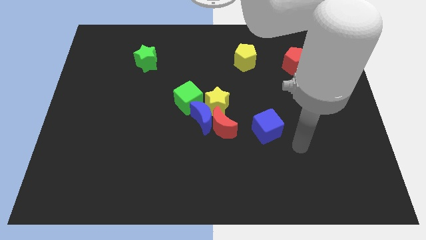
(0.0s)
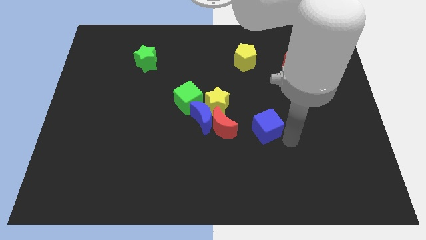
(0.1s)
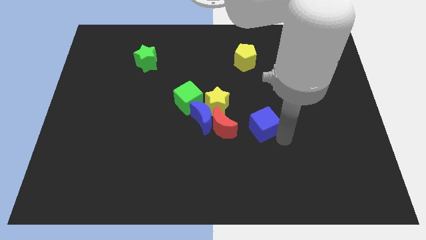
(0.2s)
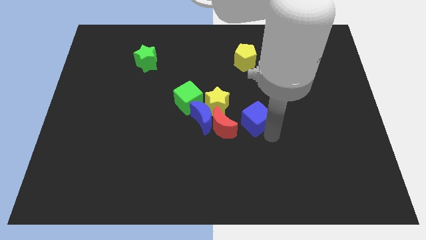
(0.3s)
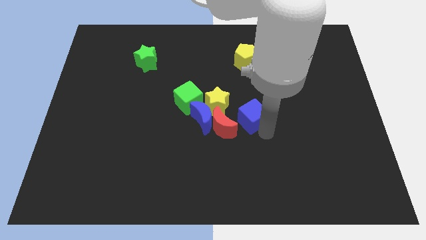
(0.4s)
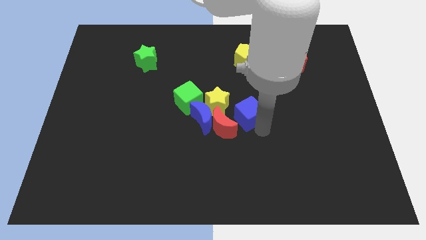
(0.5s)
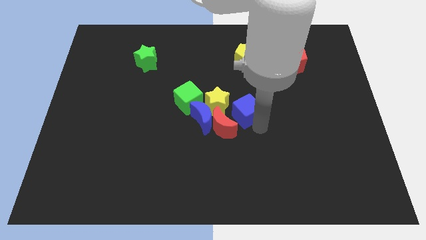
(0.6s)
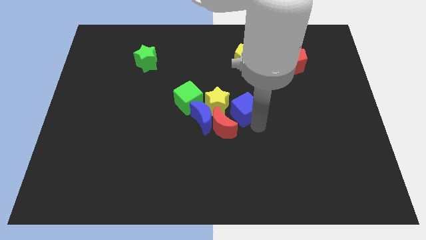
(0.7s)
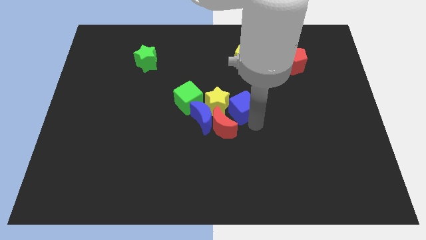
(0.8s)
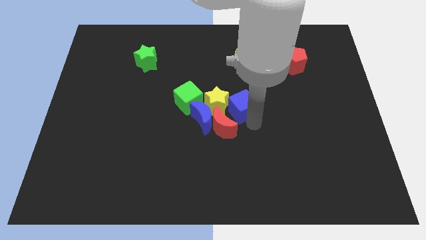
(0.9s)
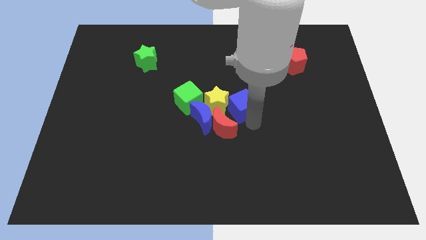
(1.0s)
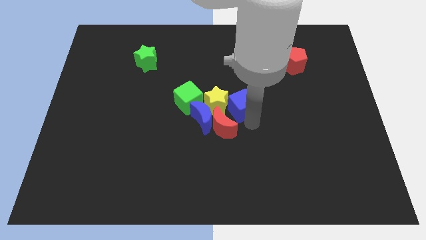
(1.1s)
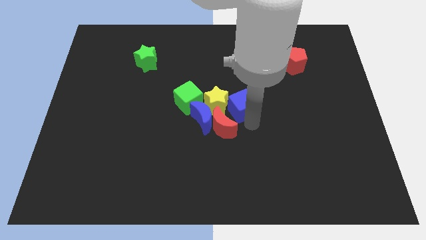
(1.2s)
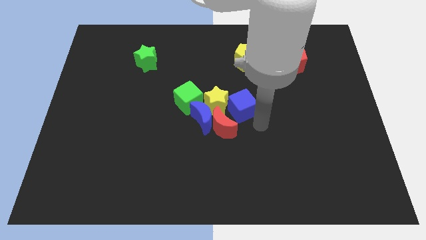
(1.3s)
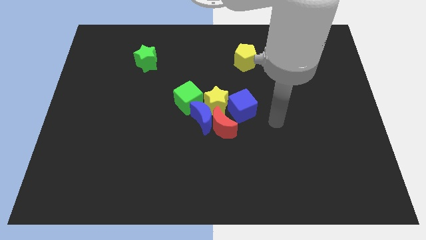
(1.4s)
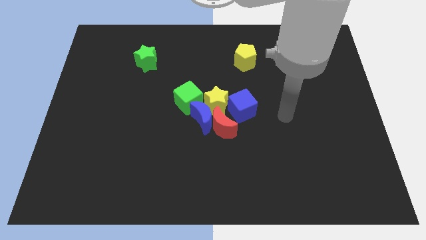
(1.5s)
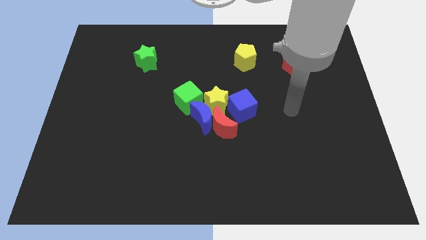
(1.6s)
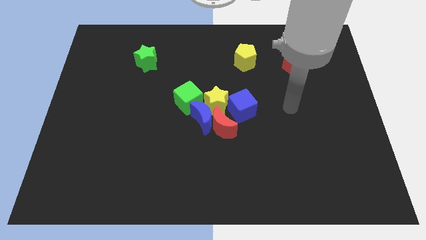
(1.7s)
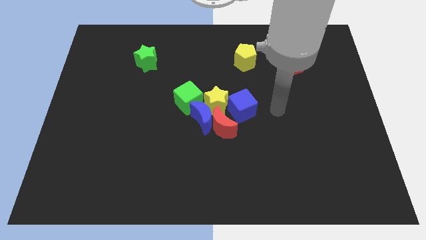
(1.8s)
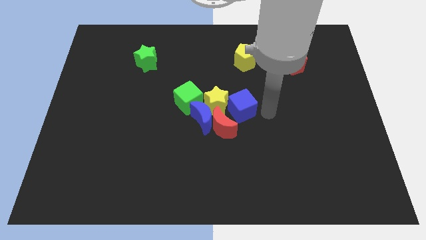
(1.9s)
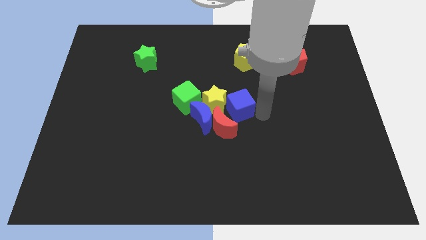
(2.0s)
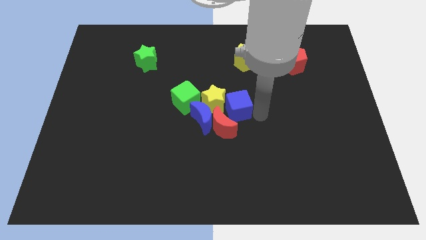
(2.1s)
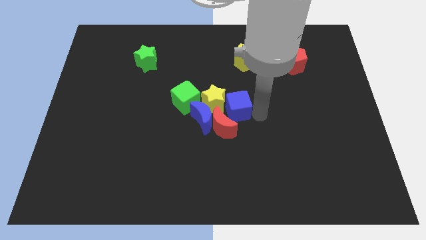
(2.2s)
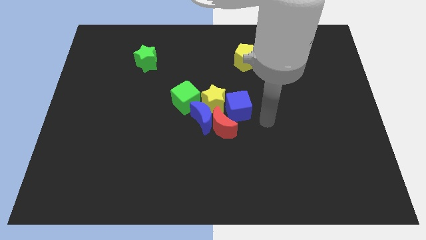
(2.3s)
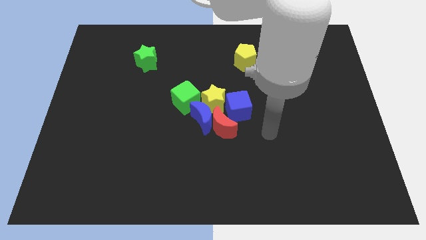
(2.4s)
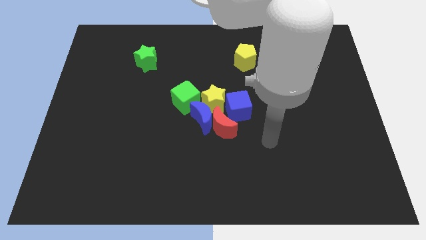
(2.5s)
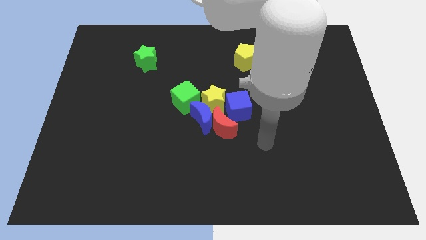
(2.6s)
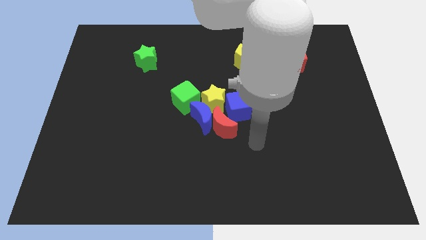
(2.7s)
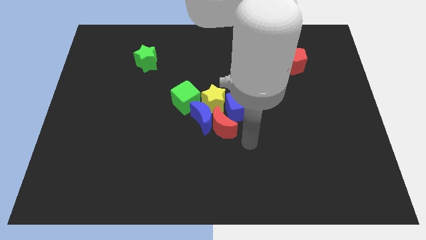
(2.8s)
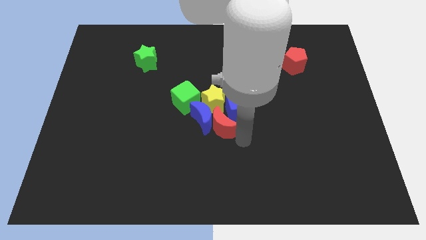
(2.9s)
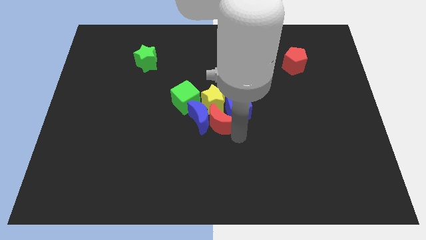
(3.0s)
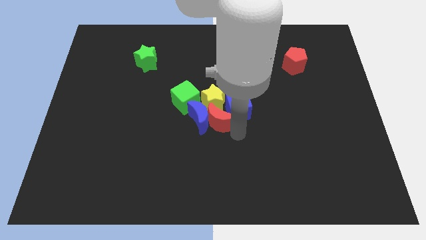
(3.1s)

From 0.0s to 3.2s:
move the blue cube into the yellow star

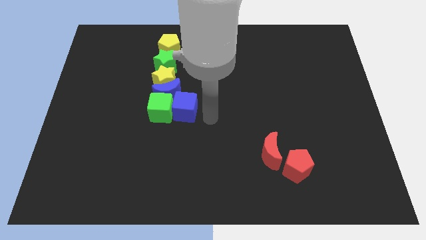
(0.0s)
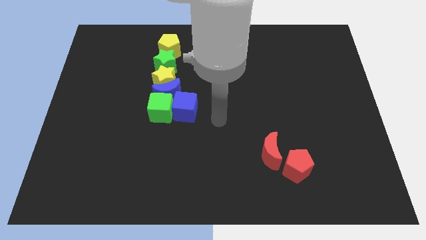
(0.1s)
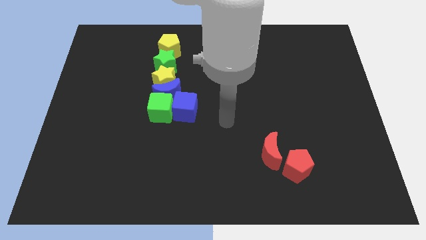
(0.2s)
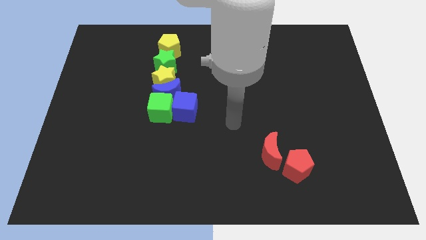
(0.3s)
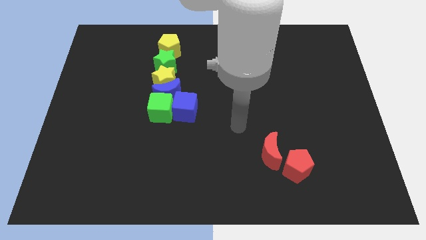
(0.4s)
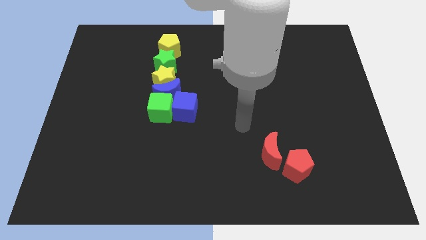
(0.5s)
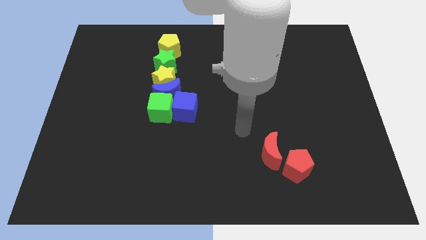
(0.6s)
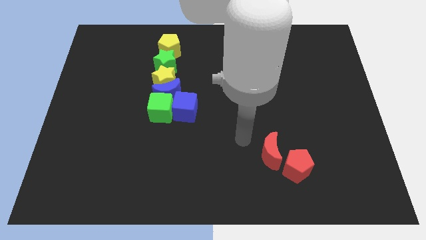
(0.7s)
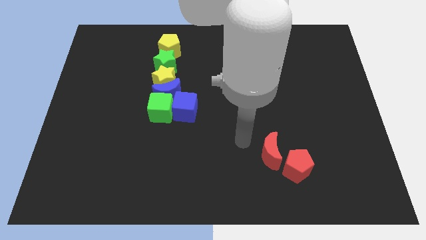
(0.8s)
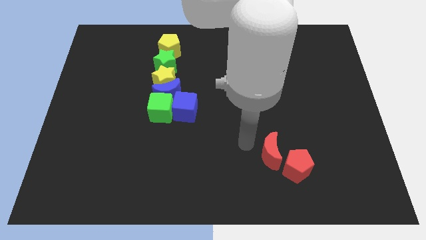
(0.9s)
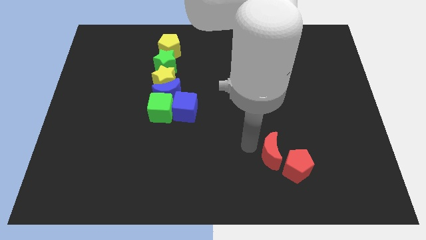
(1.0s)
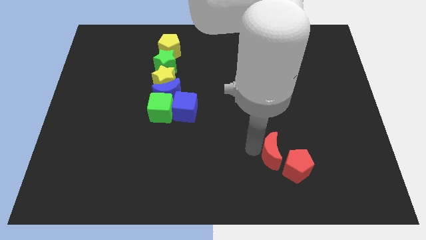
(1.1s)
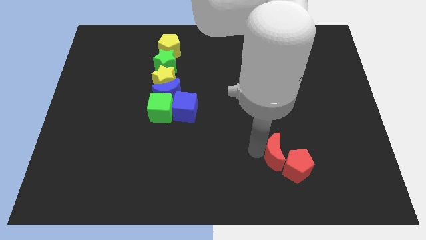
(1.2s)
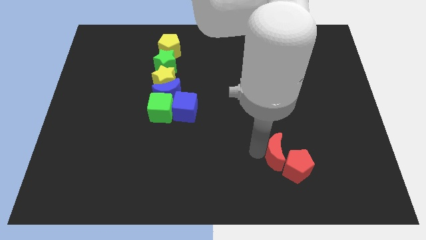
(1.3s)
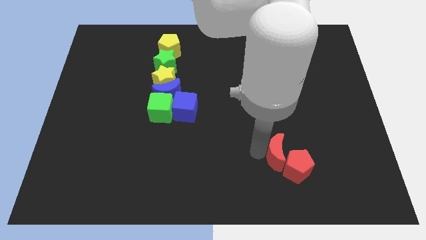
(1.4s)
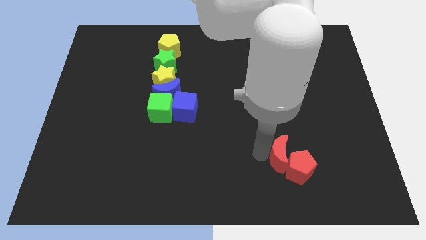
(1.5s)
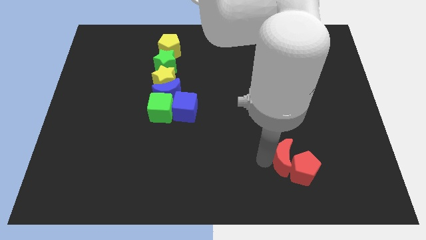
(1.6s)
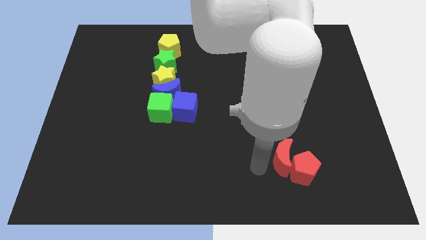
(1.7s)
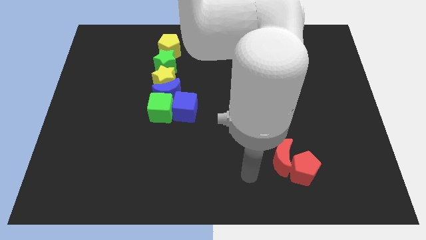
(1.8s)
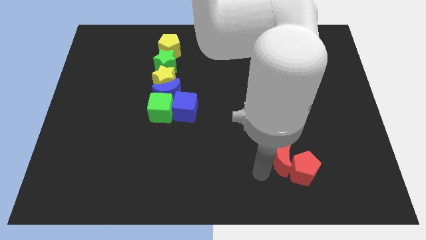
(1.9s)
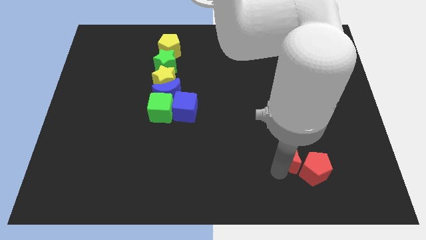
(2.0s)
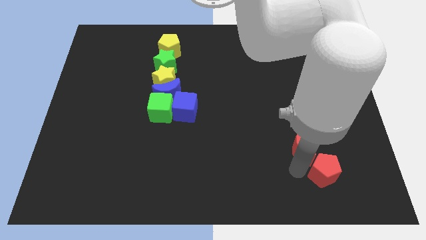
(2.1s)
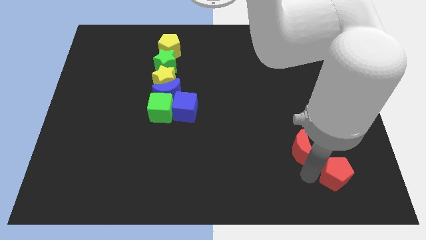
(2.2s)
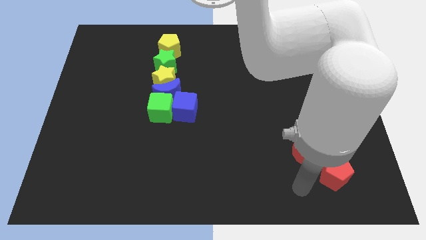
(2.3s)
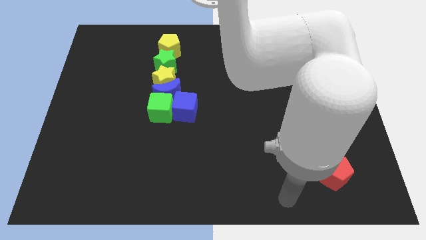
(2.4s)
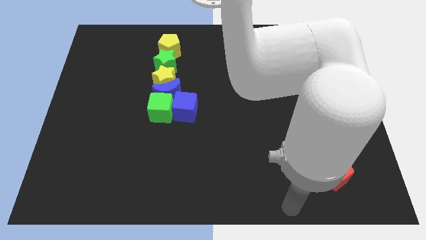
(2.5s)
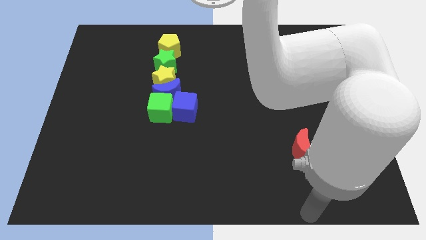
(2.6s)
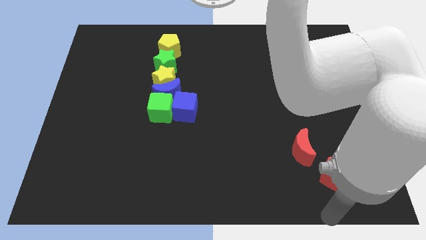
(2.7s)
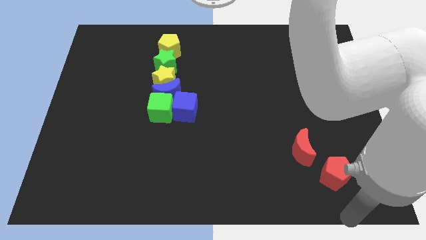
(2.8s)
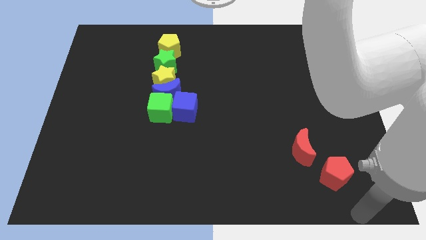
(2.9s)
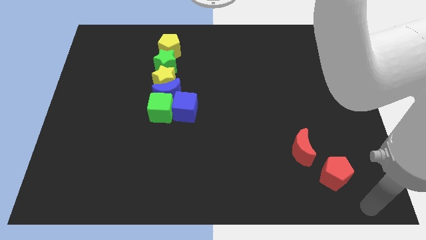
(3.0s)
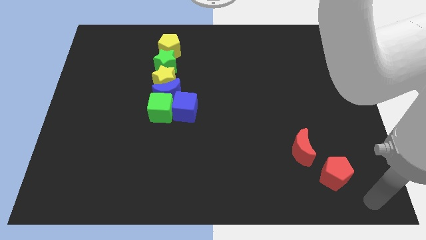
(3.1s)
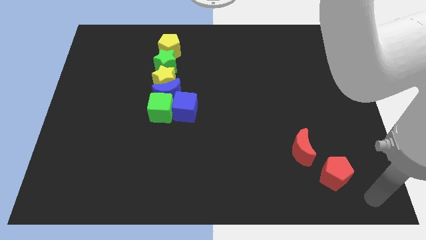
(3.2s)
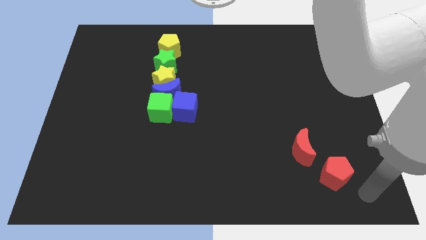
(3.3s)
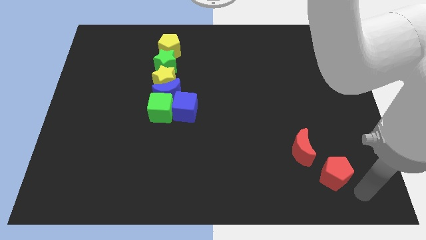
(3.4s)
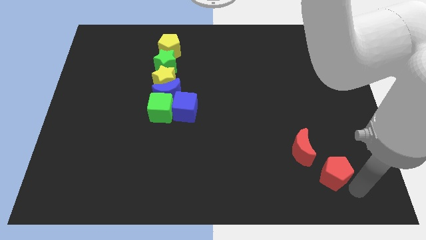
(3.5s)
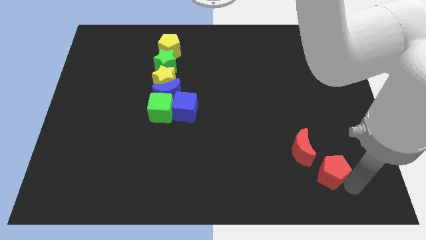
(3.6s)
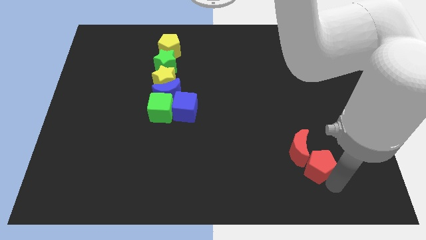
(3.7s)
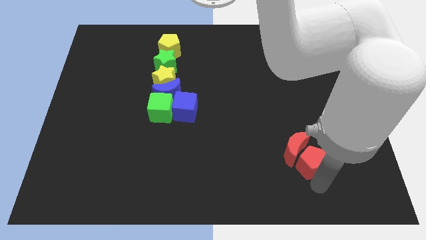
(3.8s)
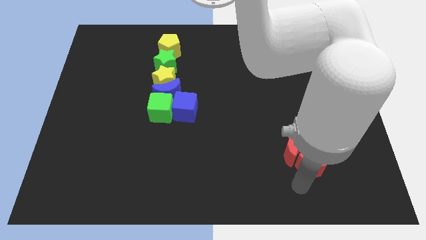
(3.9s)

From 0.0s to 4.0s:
push the red moon into the red pentagon

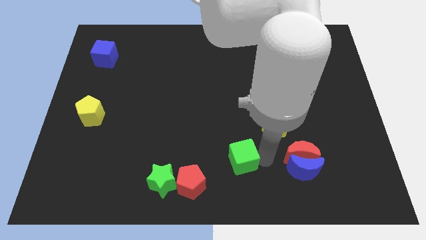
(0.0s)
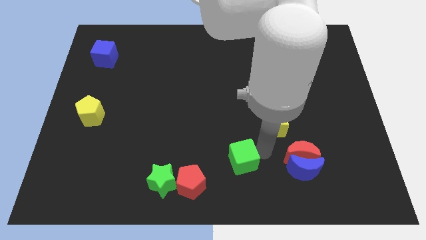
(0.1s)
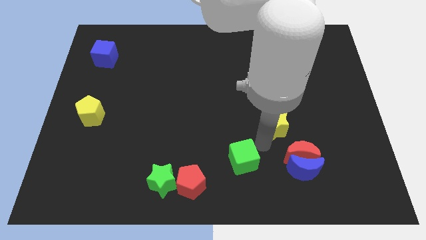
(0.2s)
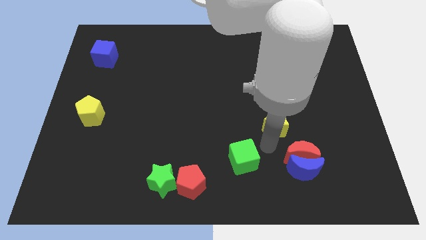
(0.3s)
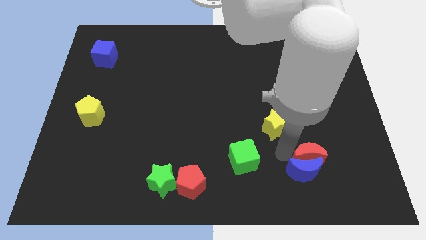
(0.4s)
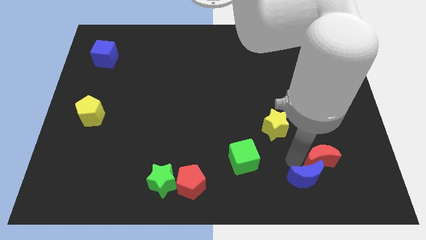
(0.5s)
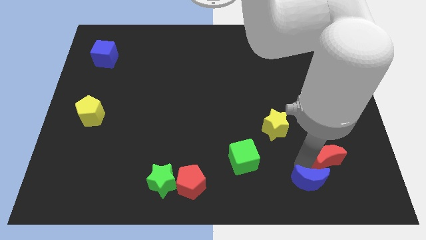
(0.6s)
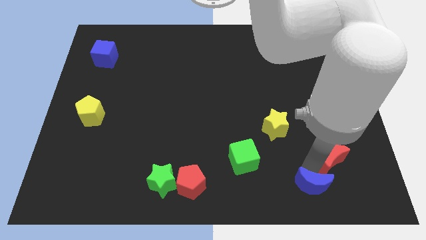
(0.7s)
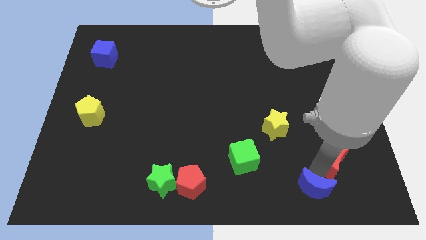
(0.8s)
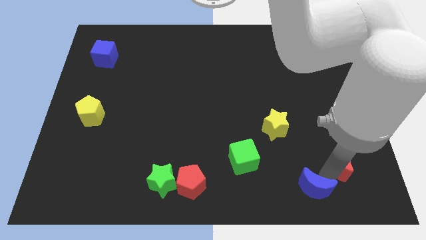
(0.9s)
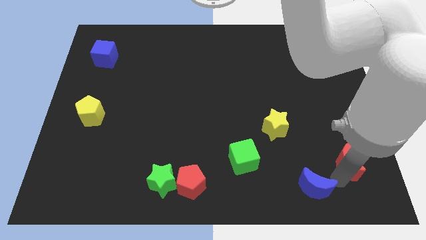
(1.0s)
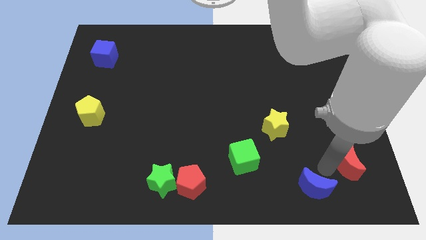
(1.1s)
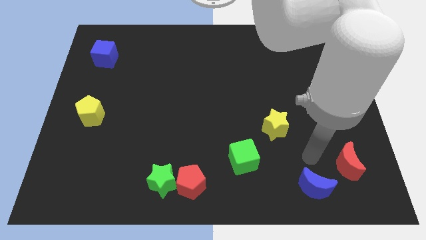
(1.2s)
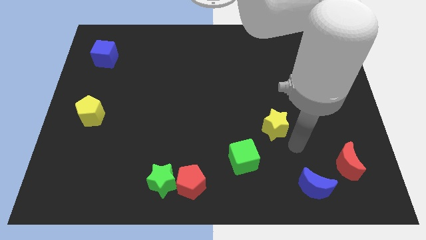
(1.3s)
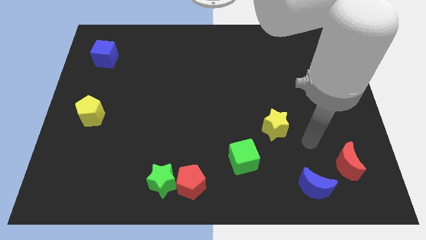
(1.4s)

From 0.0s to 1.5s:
separate the red and blue moons to the bottom side

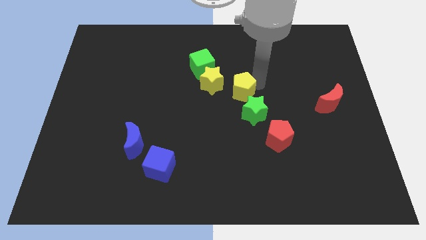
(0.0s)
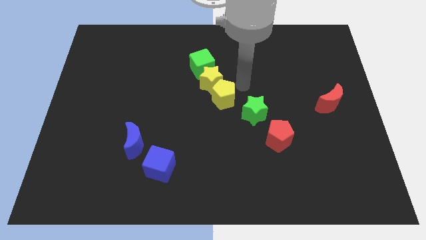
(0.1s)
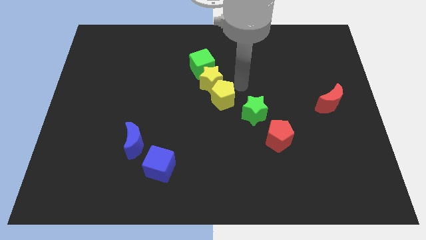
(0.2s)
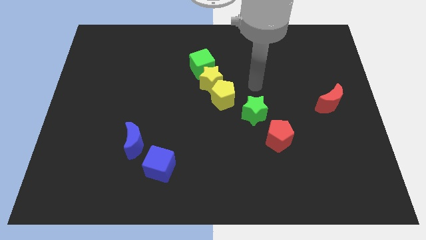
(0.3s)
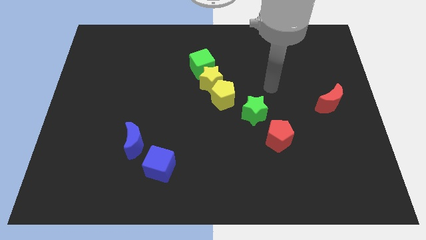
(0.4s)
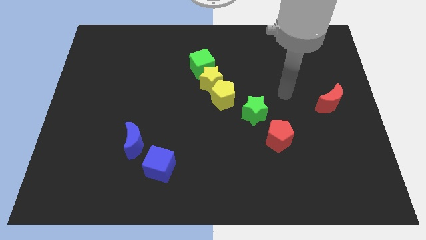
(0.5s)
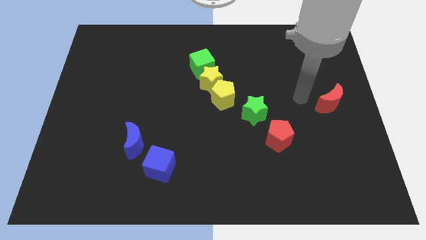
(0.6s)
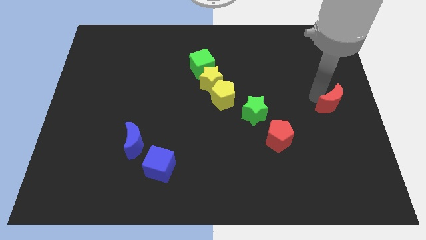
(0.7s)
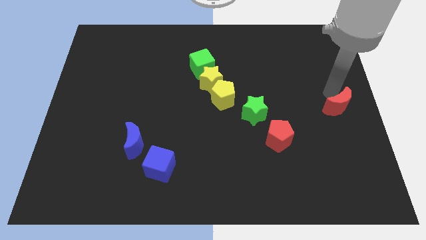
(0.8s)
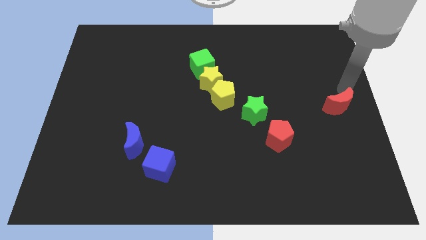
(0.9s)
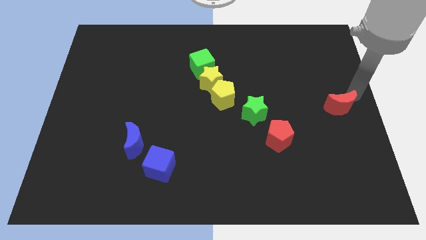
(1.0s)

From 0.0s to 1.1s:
push yellow pentagon into the yellow star
